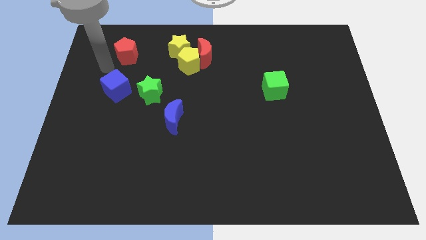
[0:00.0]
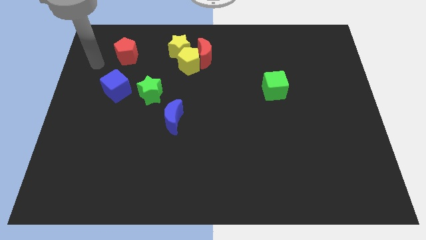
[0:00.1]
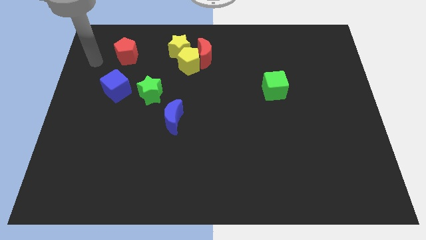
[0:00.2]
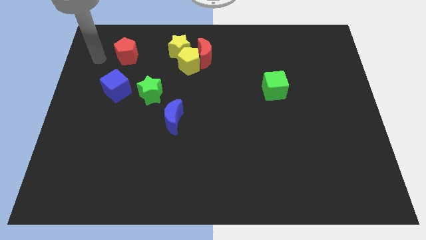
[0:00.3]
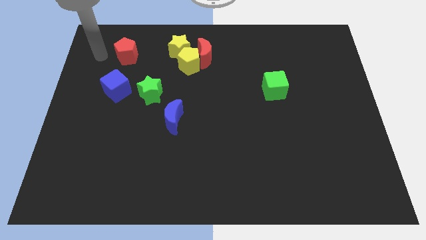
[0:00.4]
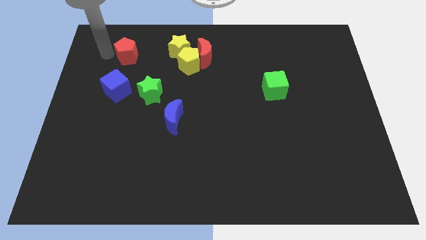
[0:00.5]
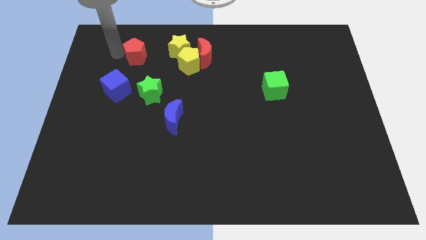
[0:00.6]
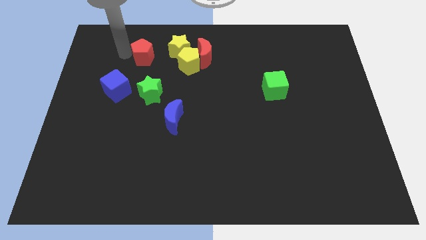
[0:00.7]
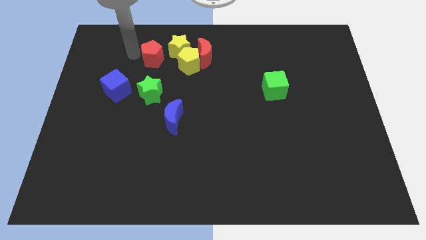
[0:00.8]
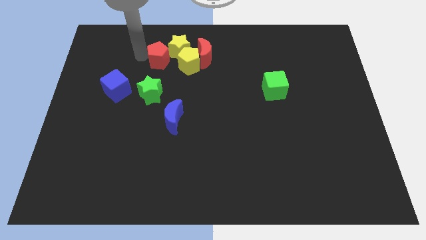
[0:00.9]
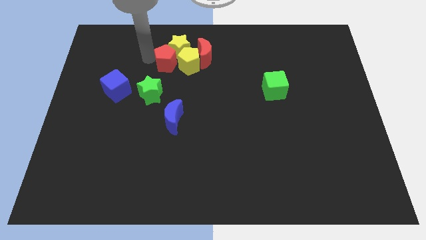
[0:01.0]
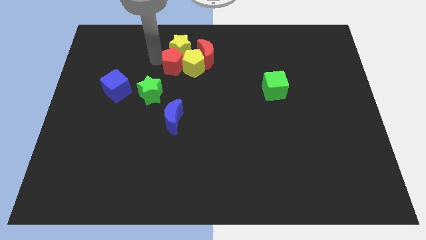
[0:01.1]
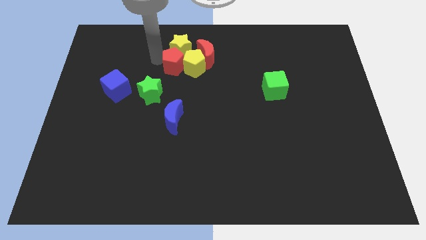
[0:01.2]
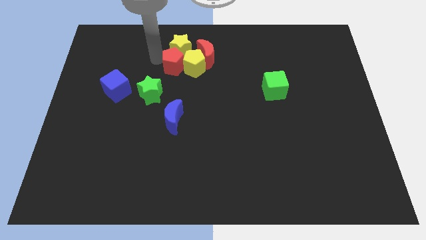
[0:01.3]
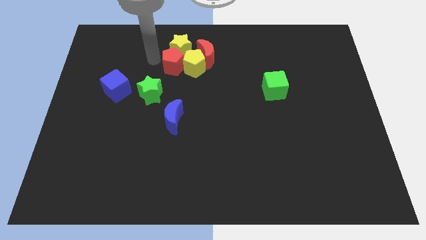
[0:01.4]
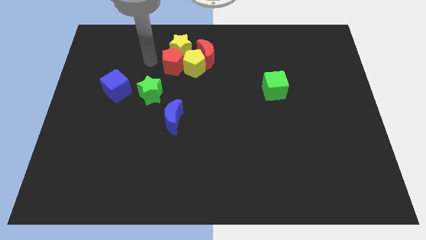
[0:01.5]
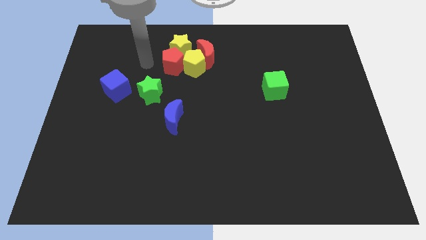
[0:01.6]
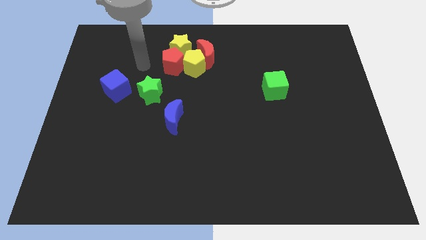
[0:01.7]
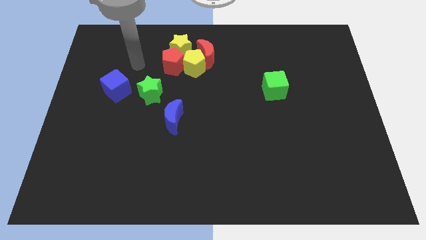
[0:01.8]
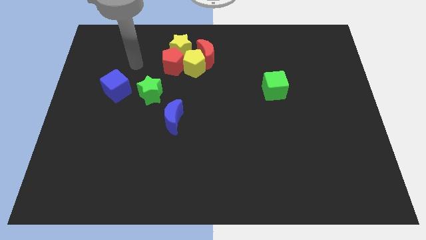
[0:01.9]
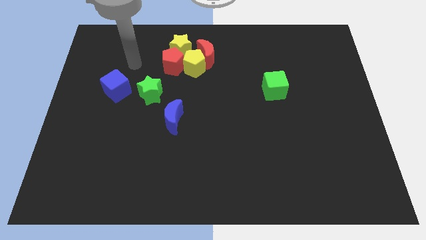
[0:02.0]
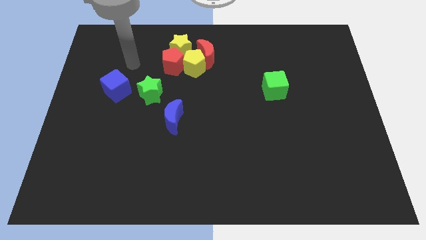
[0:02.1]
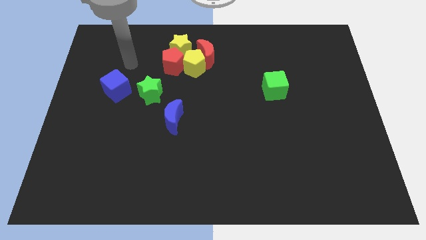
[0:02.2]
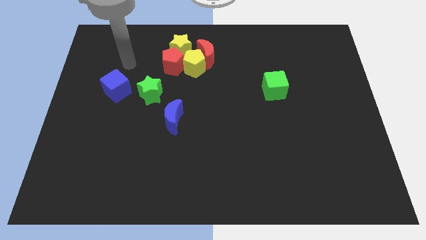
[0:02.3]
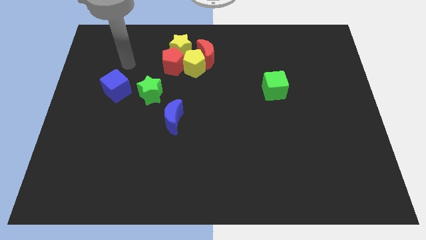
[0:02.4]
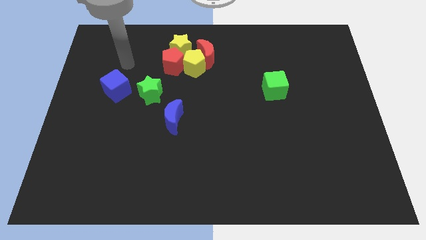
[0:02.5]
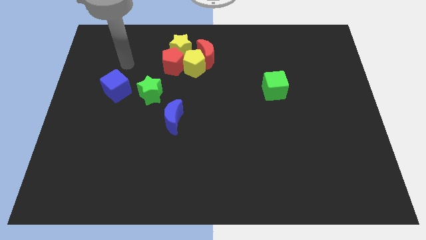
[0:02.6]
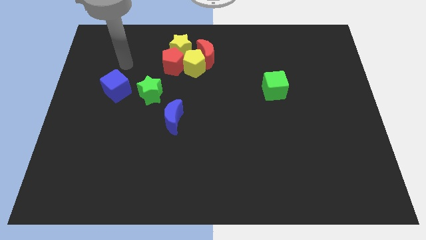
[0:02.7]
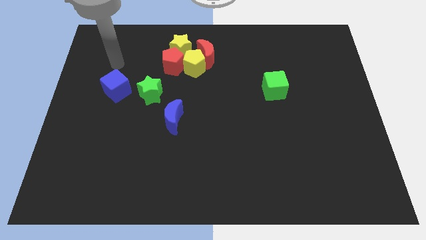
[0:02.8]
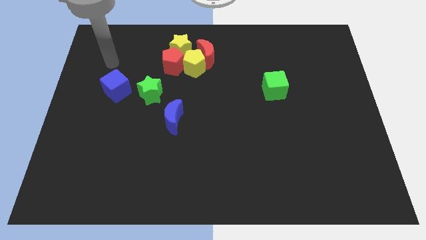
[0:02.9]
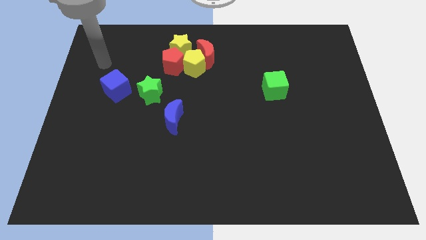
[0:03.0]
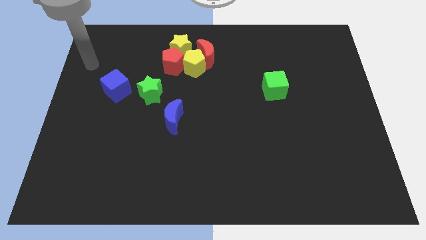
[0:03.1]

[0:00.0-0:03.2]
push the red pentagon into the yellow pentagon

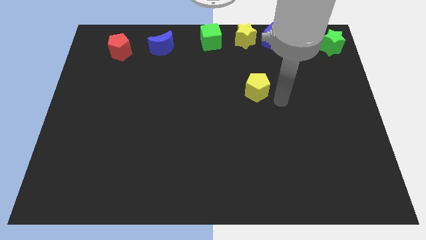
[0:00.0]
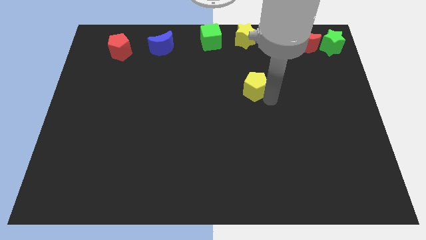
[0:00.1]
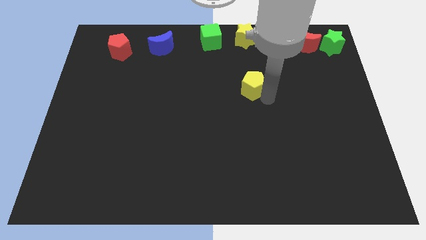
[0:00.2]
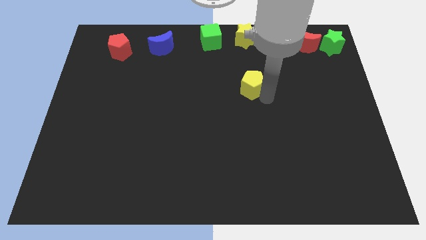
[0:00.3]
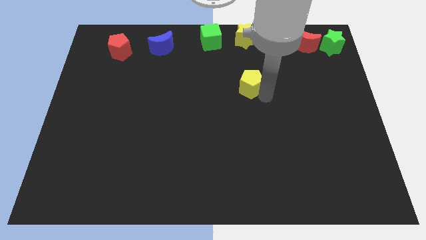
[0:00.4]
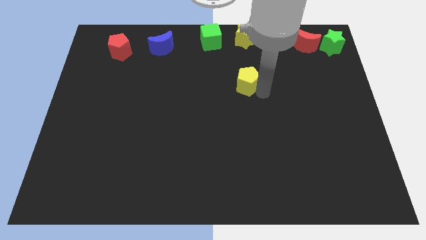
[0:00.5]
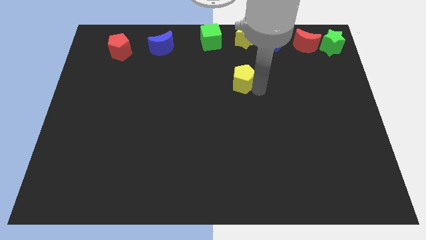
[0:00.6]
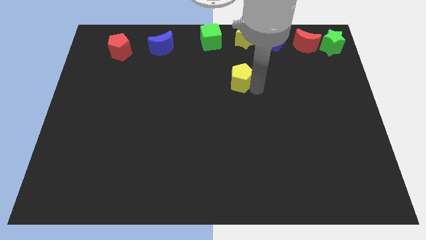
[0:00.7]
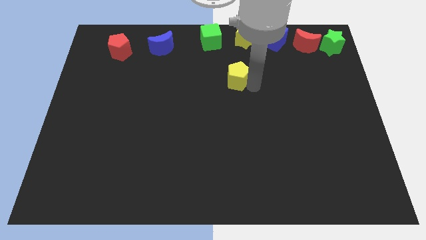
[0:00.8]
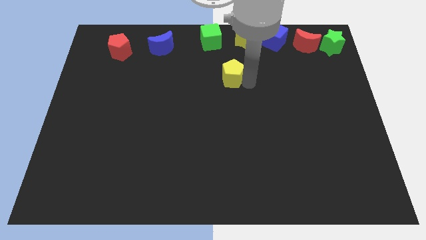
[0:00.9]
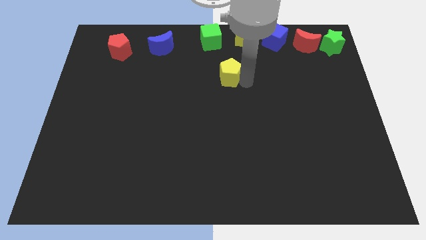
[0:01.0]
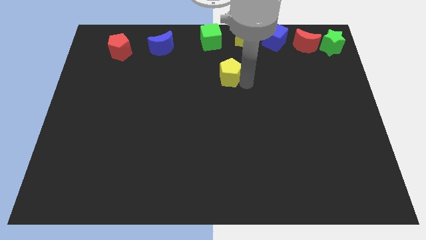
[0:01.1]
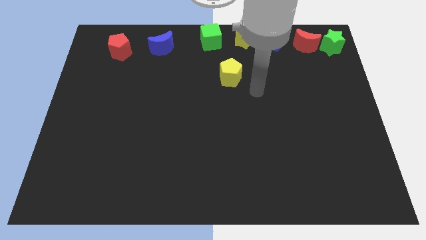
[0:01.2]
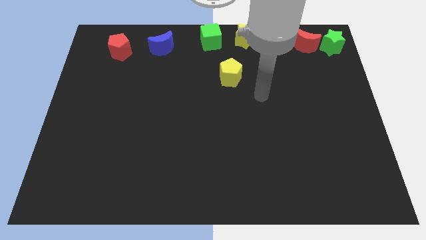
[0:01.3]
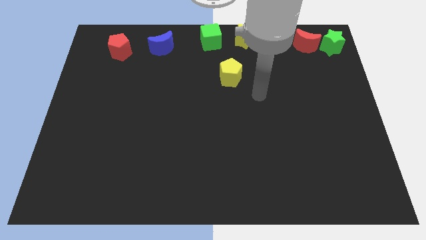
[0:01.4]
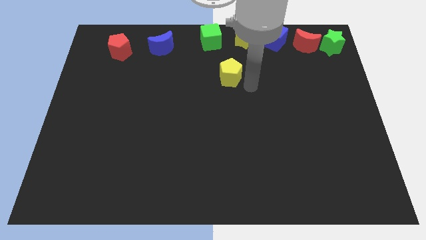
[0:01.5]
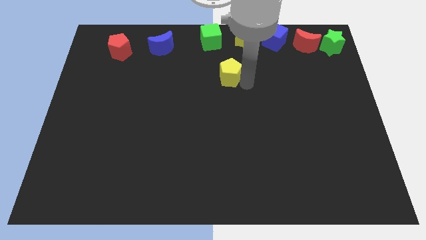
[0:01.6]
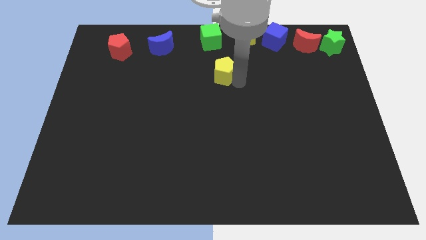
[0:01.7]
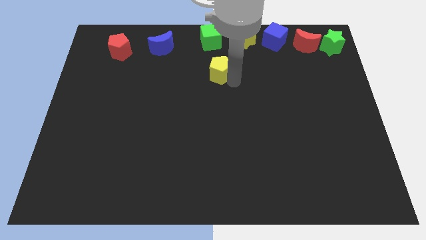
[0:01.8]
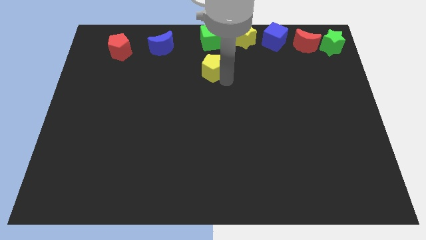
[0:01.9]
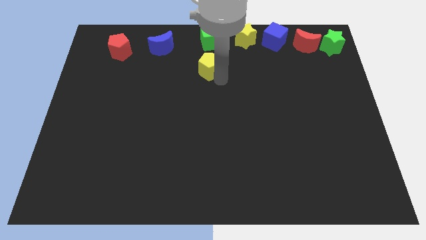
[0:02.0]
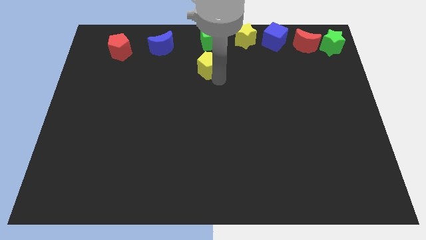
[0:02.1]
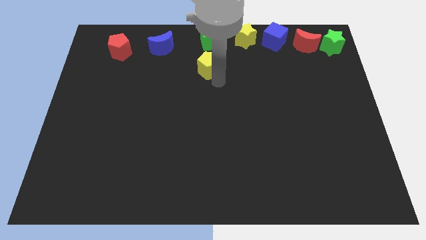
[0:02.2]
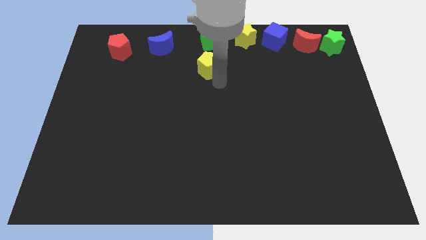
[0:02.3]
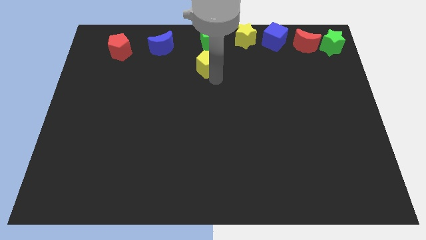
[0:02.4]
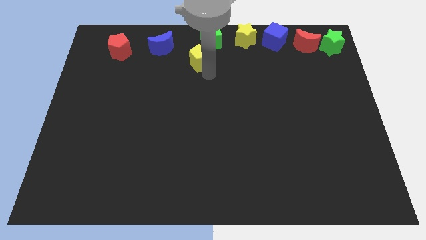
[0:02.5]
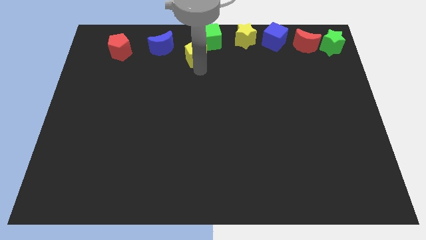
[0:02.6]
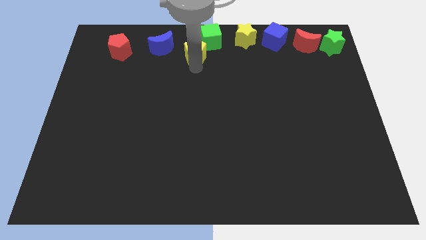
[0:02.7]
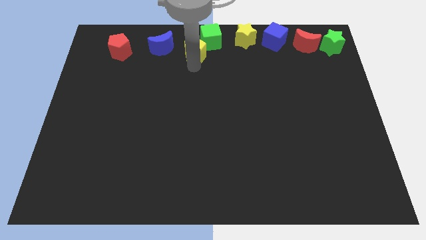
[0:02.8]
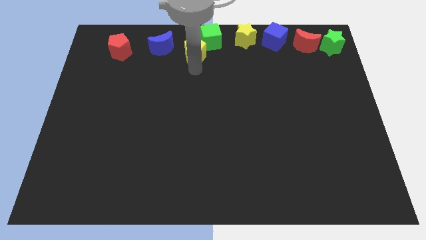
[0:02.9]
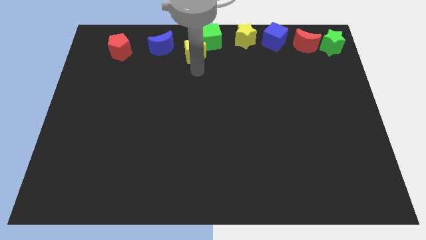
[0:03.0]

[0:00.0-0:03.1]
move the yellow star close to the green cube

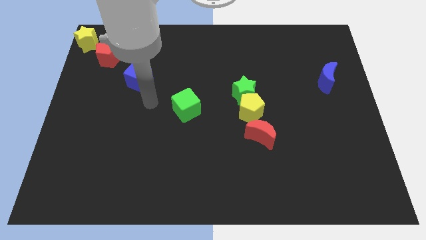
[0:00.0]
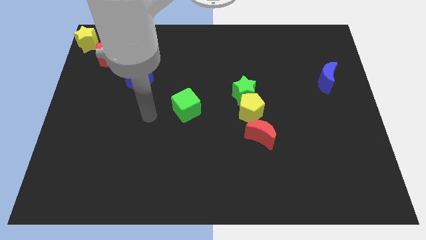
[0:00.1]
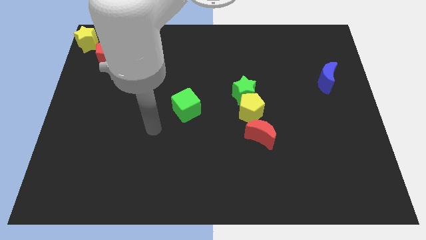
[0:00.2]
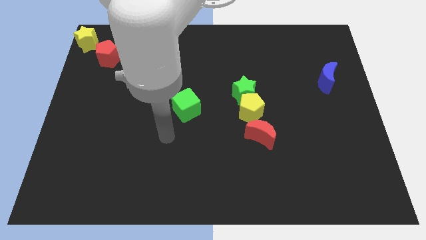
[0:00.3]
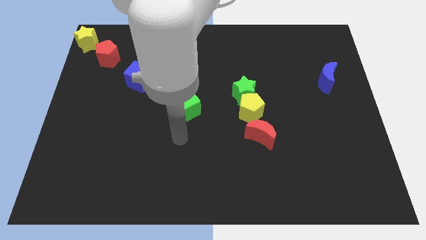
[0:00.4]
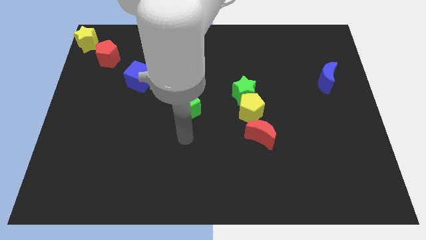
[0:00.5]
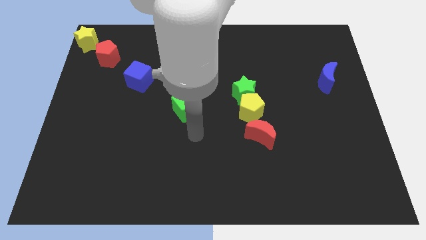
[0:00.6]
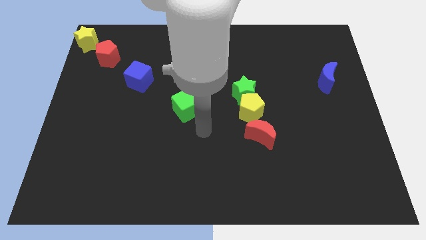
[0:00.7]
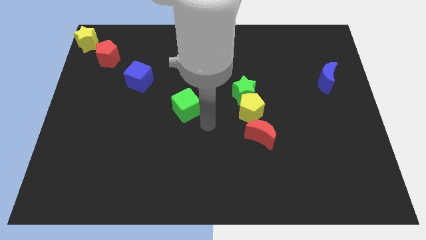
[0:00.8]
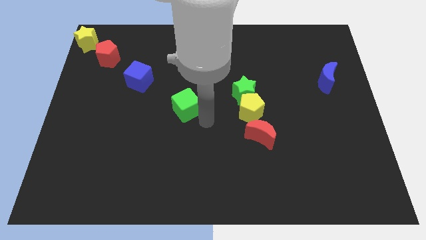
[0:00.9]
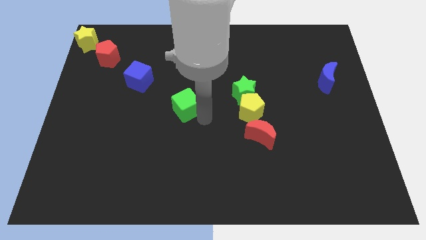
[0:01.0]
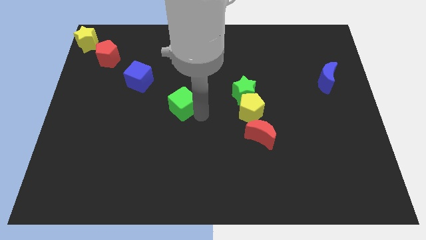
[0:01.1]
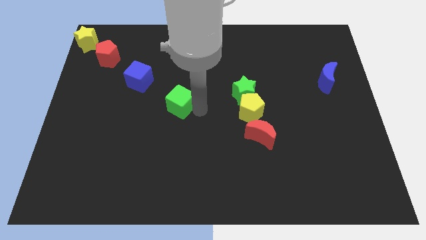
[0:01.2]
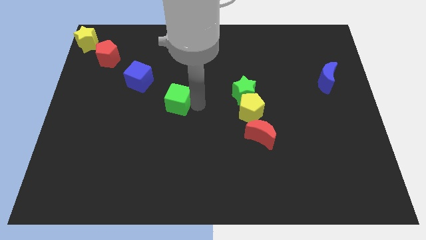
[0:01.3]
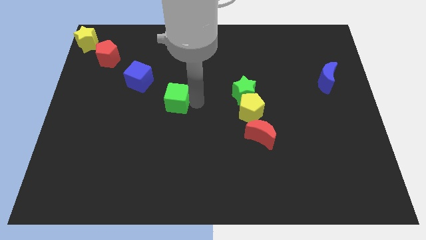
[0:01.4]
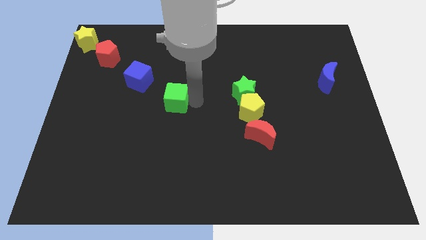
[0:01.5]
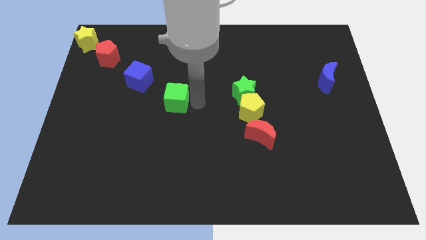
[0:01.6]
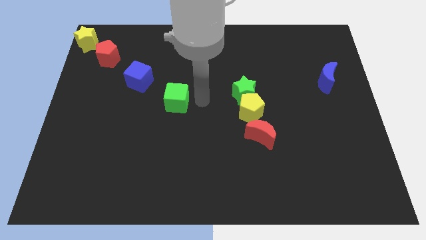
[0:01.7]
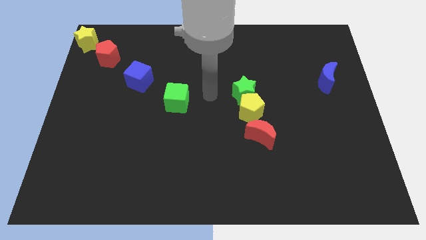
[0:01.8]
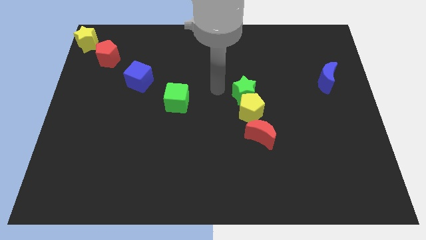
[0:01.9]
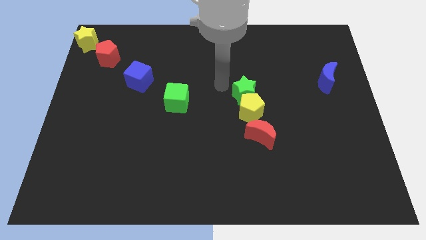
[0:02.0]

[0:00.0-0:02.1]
push the green cube slightly to the top

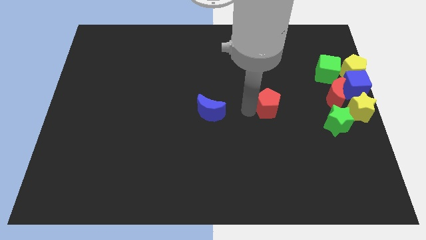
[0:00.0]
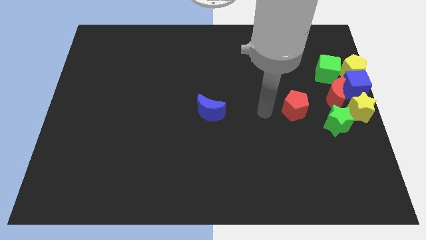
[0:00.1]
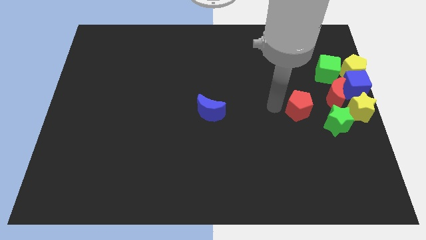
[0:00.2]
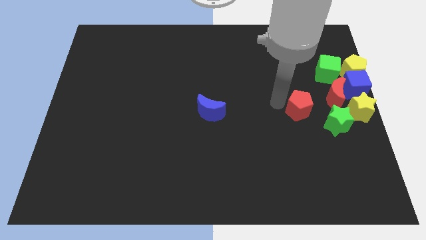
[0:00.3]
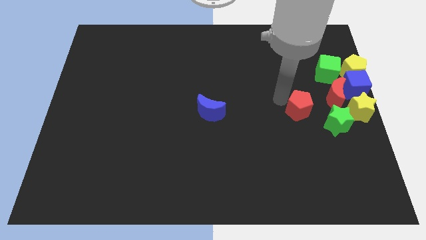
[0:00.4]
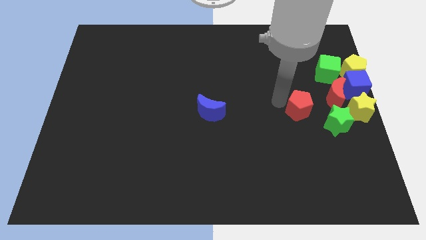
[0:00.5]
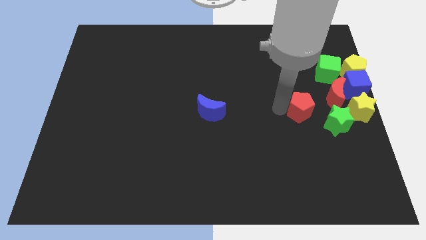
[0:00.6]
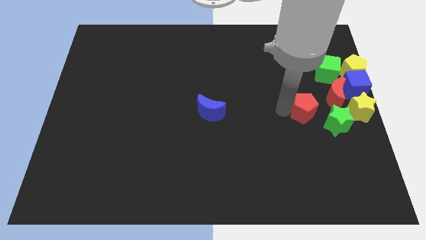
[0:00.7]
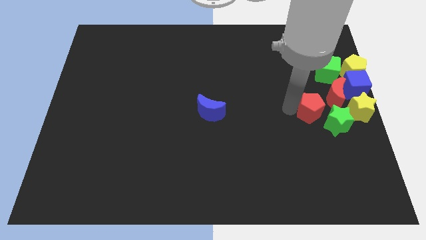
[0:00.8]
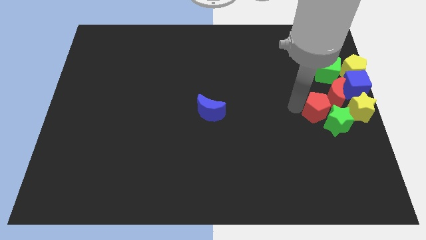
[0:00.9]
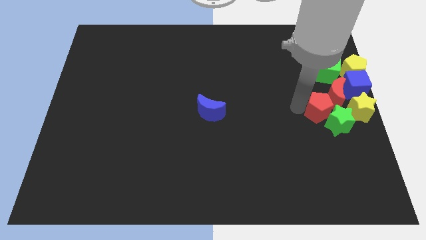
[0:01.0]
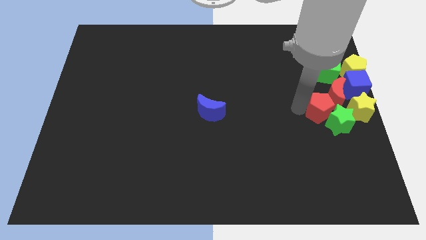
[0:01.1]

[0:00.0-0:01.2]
place red pentagon above the green star
